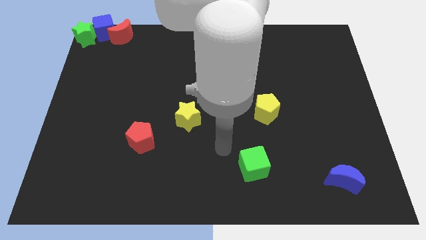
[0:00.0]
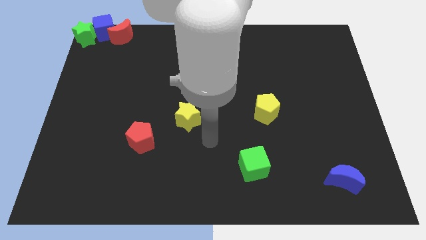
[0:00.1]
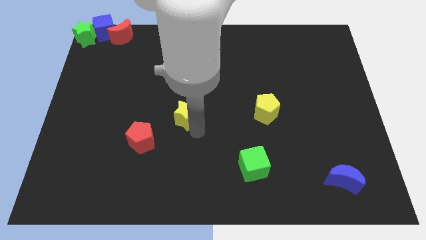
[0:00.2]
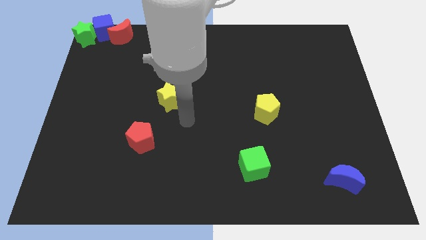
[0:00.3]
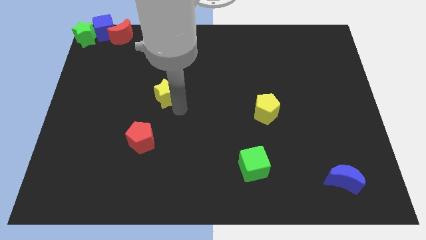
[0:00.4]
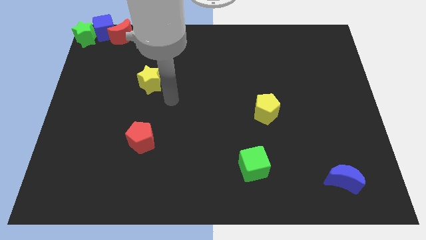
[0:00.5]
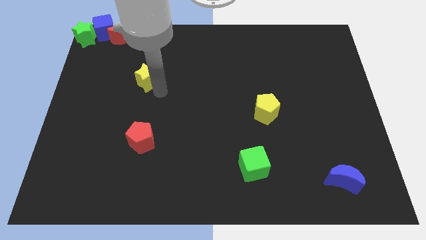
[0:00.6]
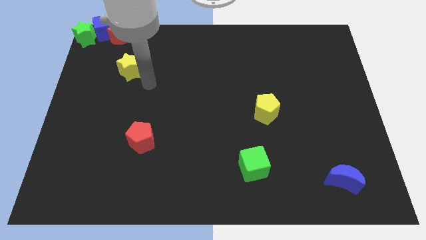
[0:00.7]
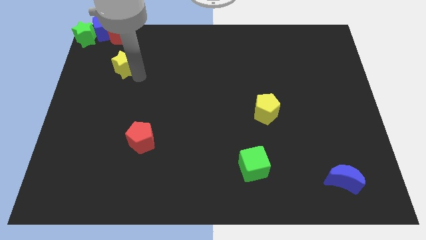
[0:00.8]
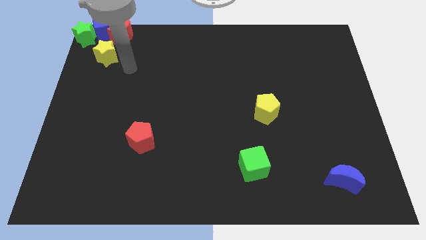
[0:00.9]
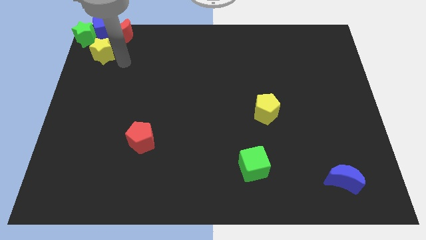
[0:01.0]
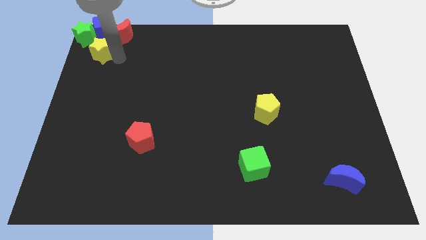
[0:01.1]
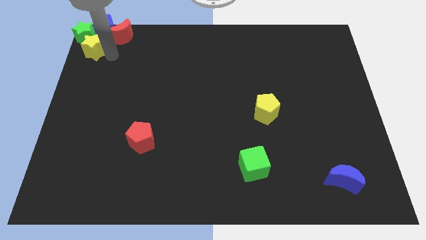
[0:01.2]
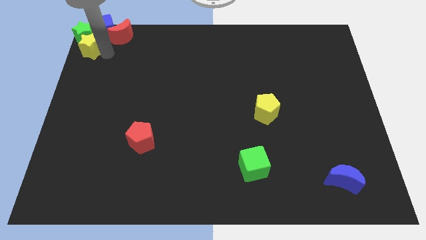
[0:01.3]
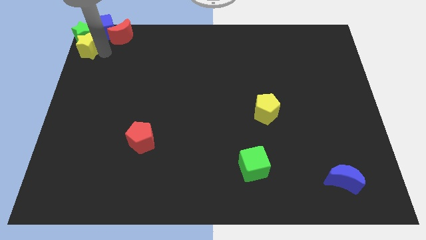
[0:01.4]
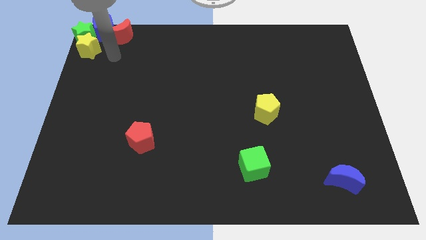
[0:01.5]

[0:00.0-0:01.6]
push yellow star into green star

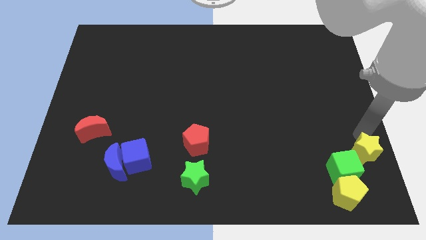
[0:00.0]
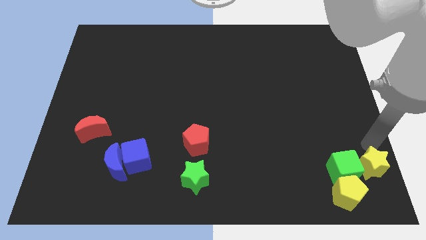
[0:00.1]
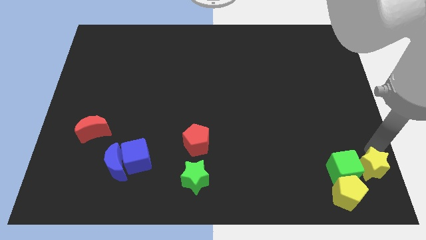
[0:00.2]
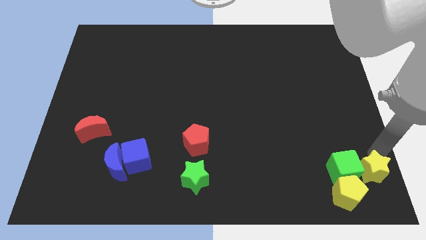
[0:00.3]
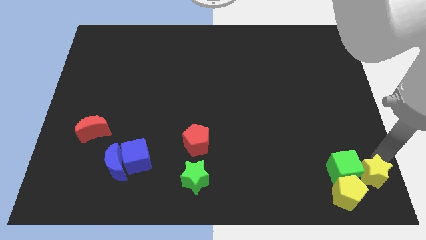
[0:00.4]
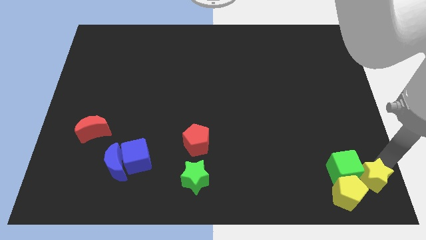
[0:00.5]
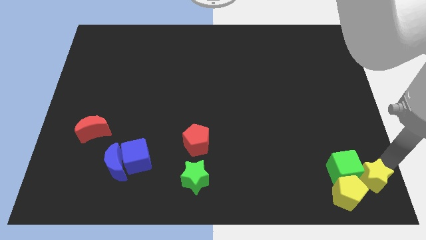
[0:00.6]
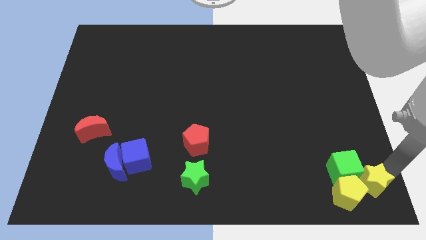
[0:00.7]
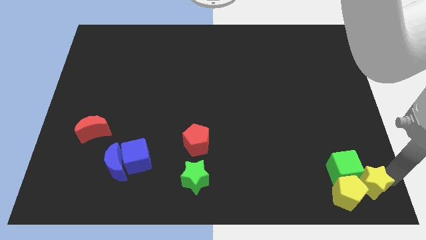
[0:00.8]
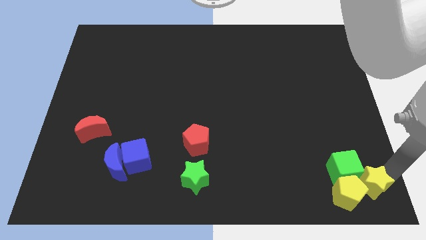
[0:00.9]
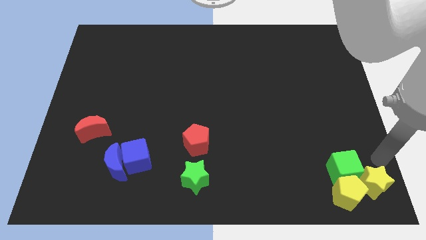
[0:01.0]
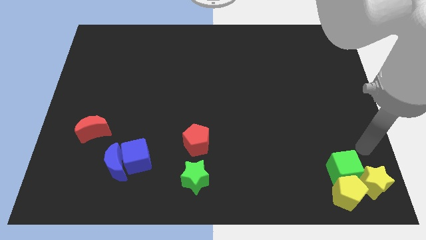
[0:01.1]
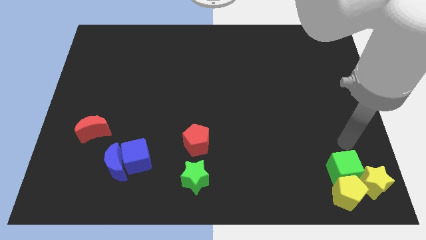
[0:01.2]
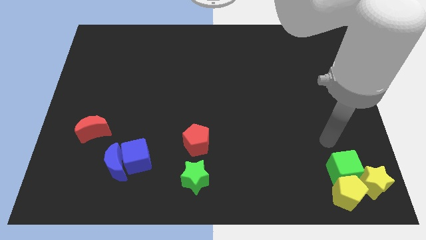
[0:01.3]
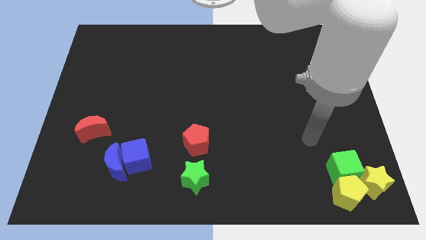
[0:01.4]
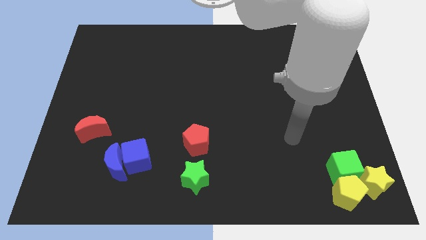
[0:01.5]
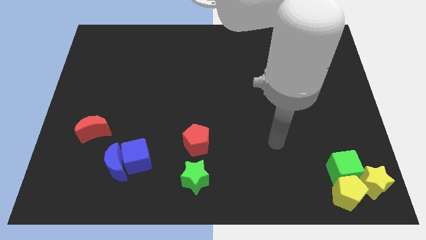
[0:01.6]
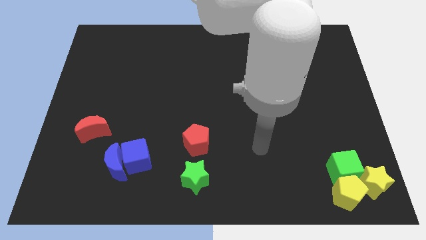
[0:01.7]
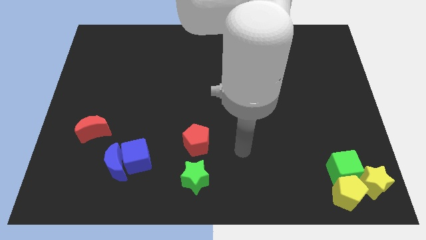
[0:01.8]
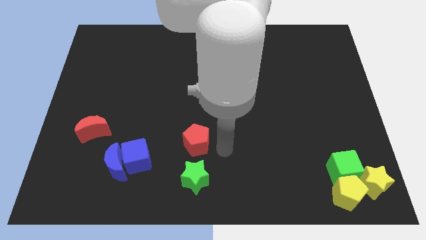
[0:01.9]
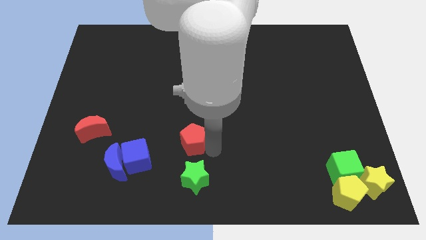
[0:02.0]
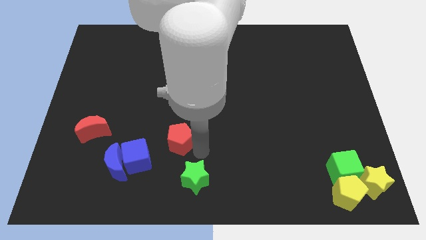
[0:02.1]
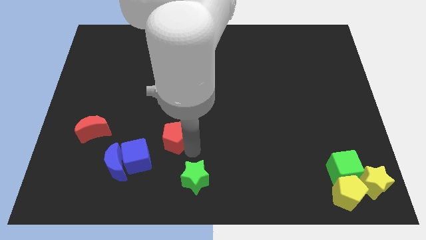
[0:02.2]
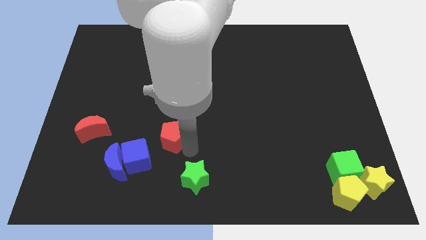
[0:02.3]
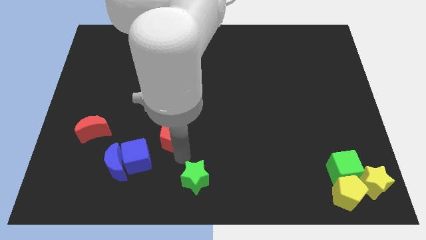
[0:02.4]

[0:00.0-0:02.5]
push red pentagon slightly towards left

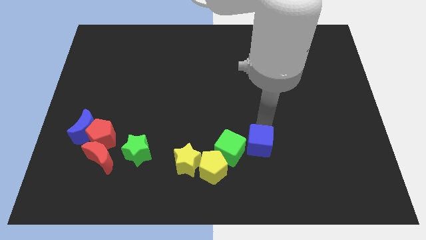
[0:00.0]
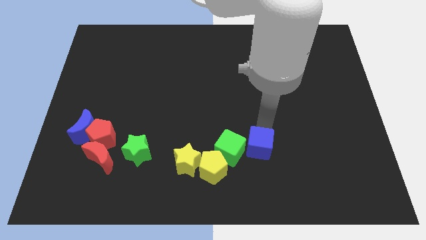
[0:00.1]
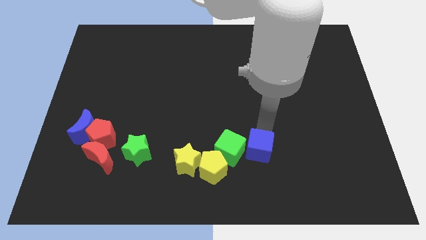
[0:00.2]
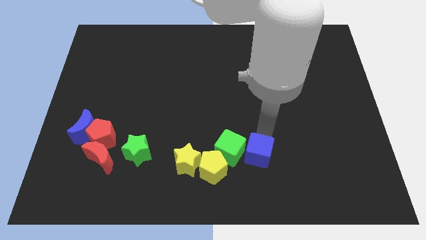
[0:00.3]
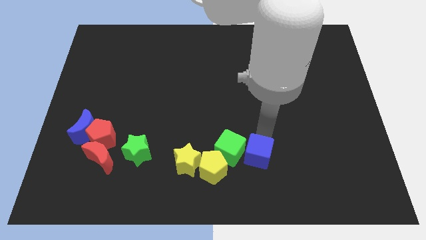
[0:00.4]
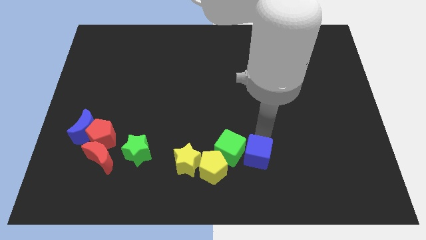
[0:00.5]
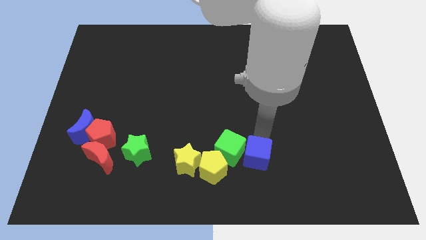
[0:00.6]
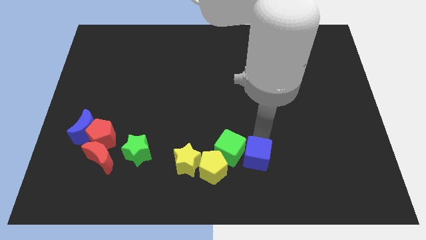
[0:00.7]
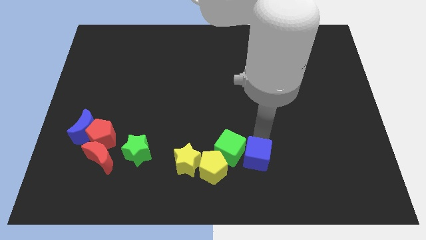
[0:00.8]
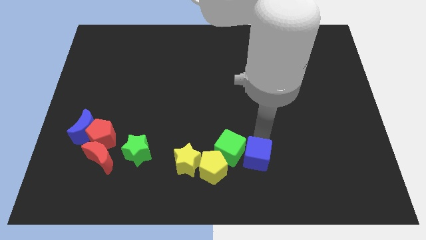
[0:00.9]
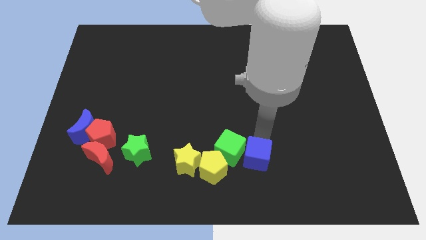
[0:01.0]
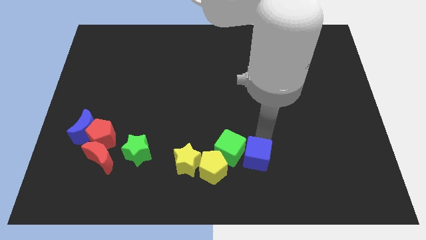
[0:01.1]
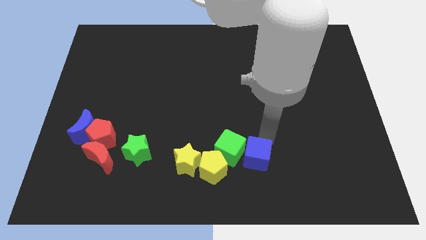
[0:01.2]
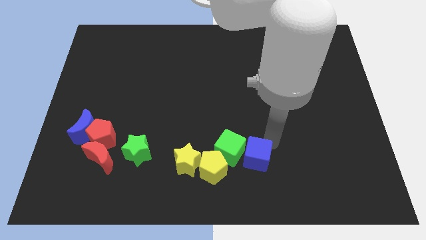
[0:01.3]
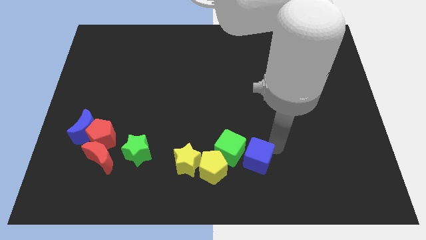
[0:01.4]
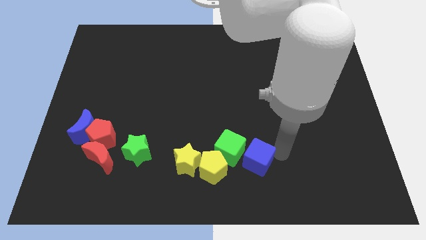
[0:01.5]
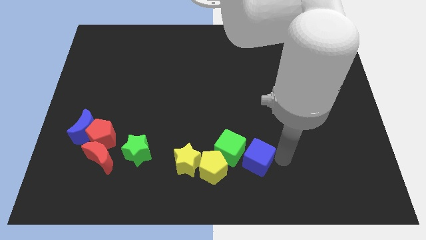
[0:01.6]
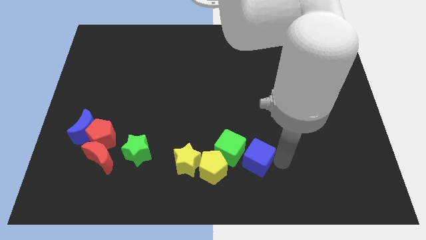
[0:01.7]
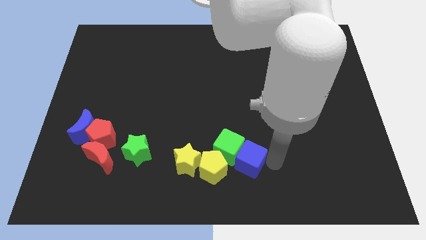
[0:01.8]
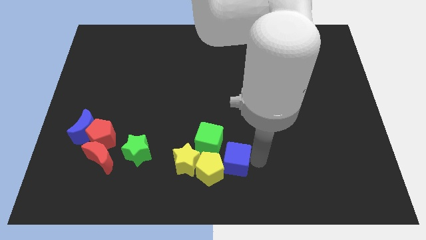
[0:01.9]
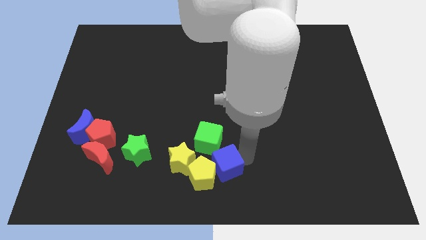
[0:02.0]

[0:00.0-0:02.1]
place the blue cube into the yellow pentagon

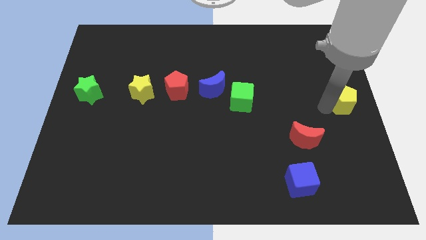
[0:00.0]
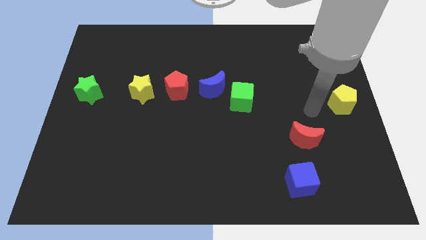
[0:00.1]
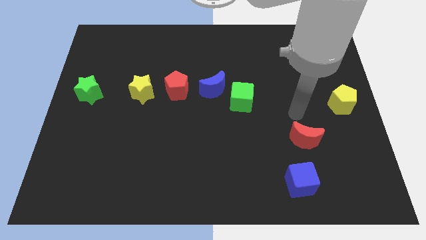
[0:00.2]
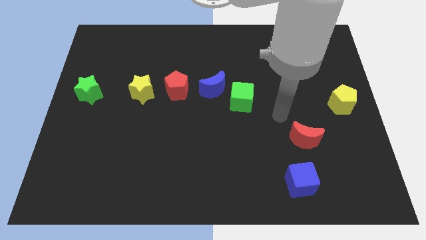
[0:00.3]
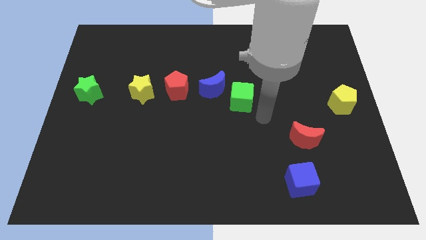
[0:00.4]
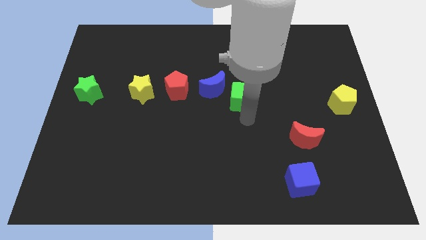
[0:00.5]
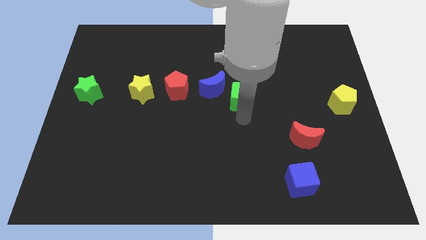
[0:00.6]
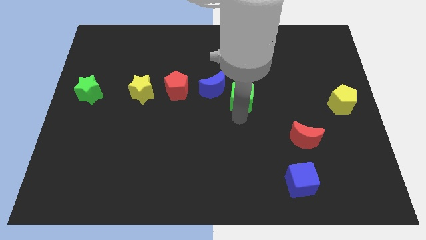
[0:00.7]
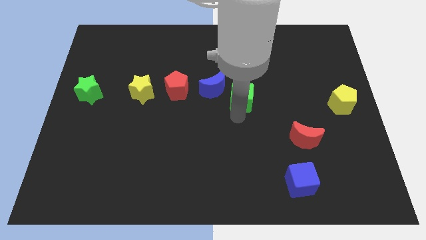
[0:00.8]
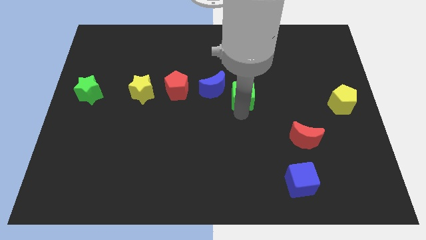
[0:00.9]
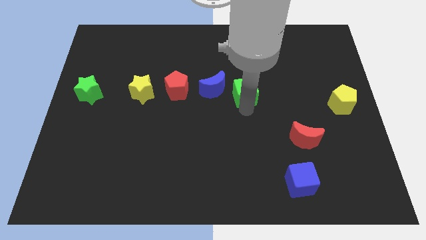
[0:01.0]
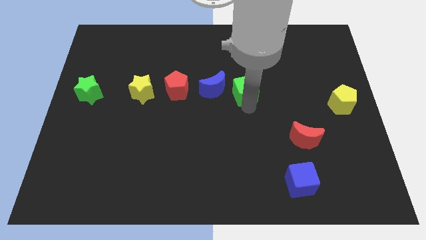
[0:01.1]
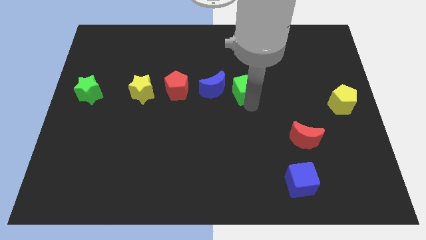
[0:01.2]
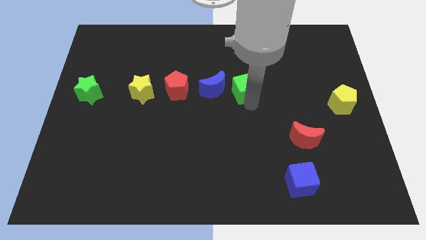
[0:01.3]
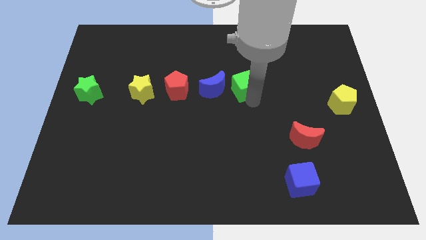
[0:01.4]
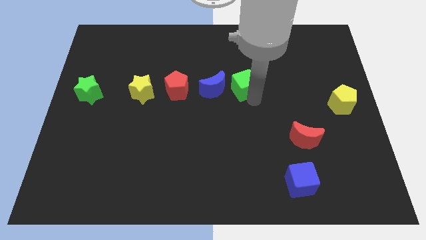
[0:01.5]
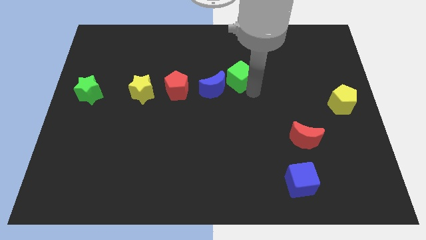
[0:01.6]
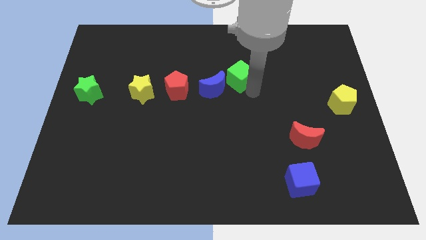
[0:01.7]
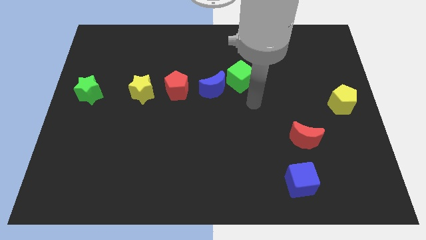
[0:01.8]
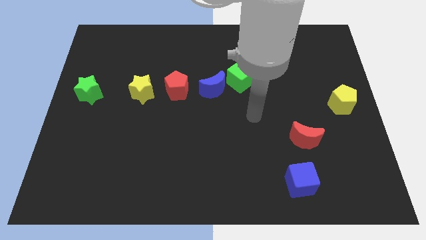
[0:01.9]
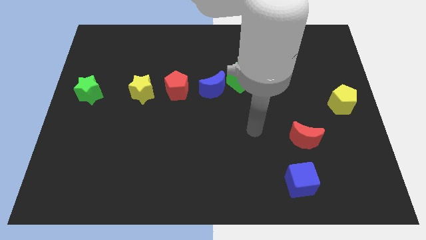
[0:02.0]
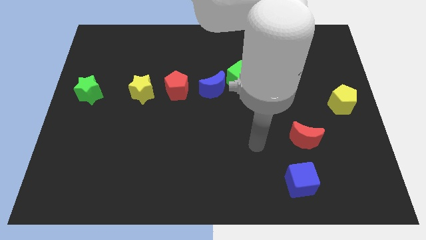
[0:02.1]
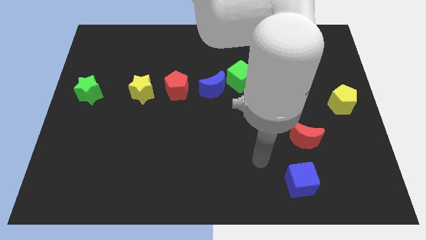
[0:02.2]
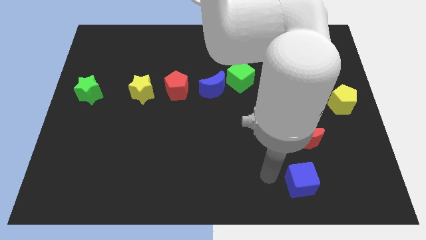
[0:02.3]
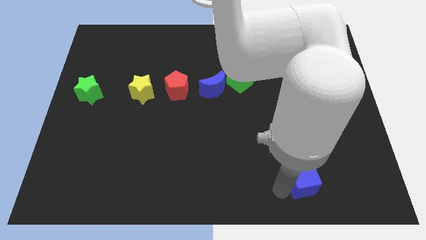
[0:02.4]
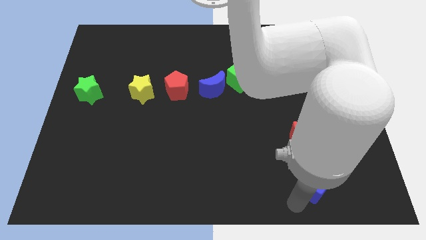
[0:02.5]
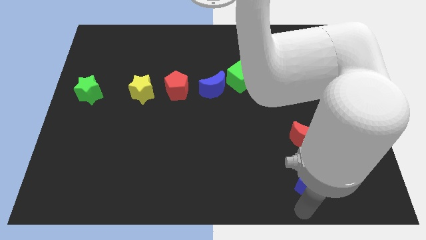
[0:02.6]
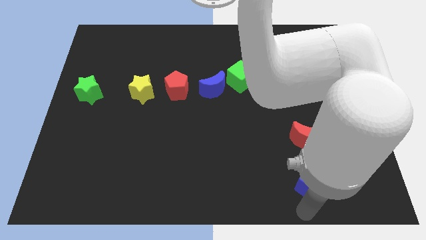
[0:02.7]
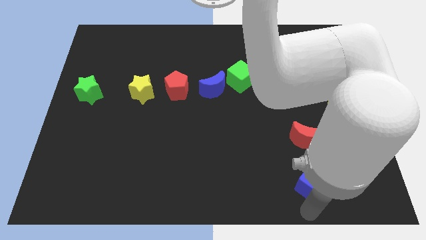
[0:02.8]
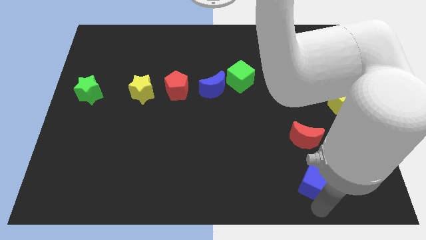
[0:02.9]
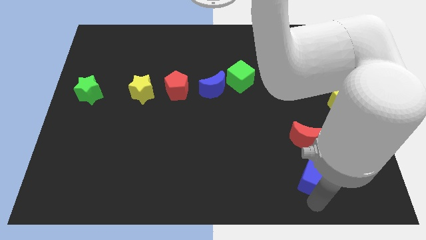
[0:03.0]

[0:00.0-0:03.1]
move the green cube to the top right of the blue crescent
